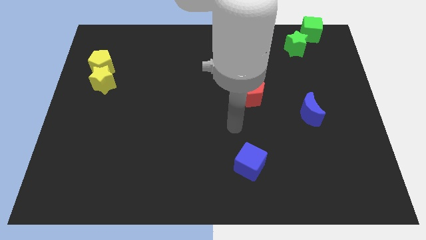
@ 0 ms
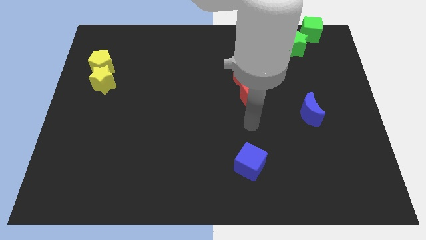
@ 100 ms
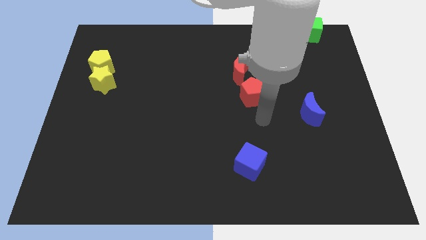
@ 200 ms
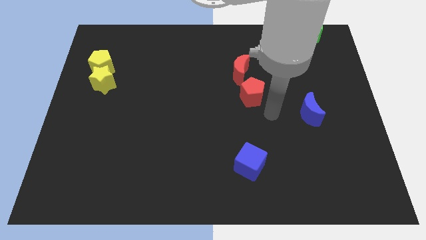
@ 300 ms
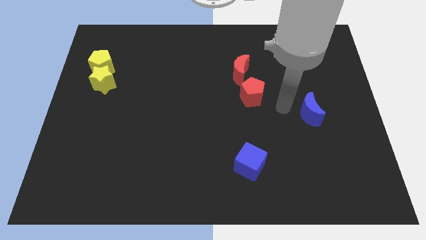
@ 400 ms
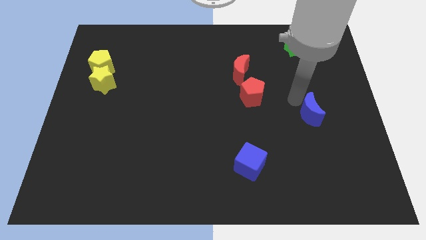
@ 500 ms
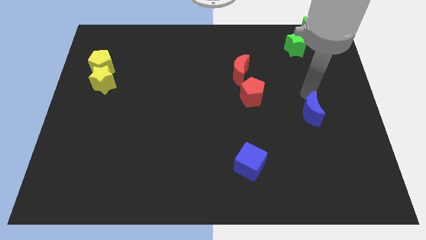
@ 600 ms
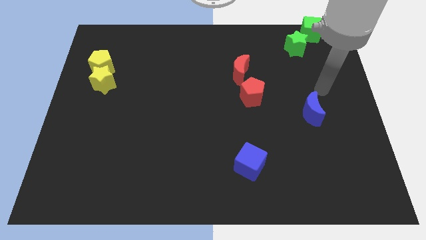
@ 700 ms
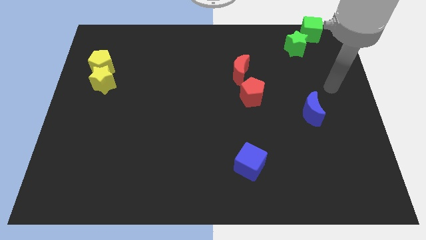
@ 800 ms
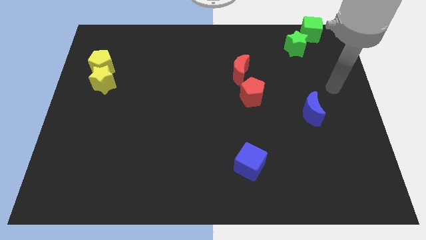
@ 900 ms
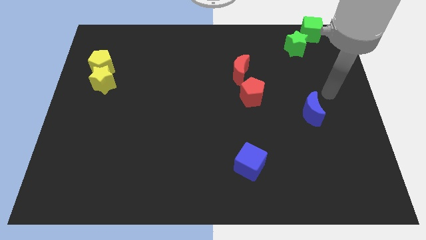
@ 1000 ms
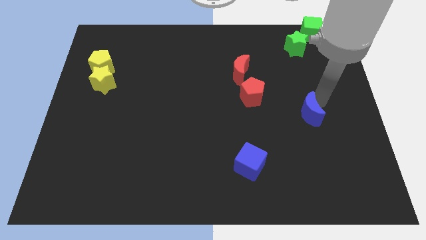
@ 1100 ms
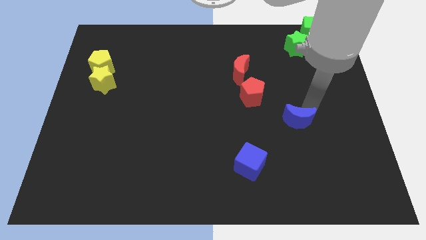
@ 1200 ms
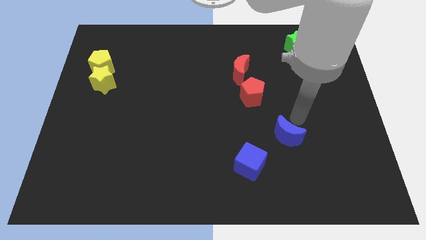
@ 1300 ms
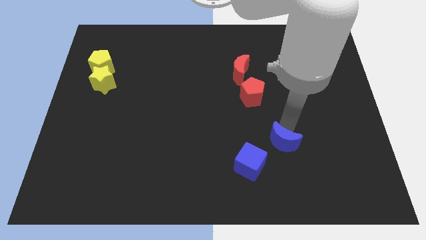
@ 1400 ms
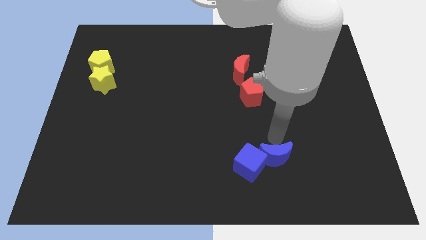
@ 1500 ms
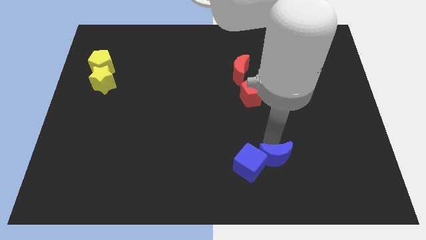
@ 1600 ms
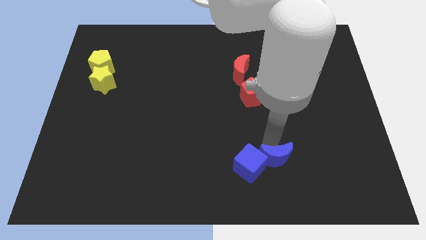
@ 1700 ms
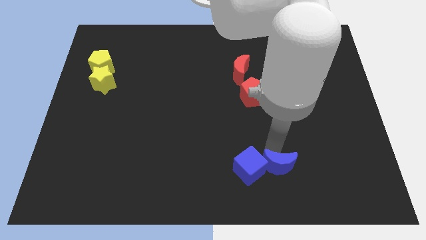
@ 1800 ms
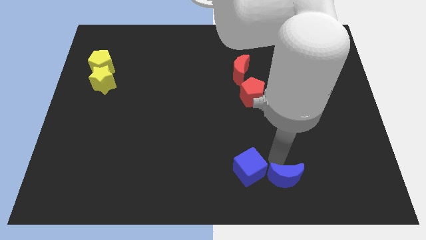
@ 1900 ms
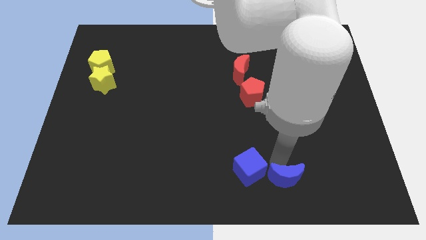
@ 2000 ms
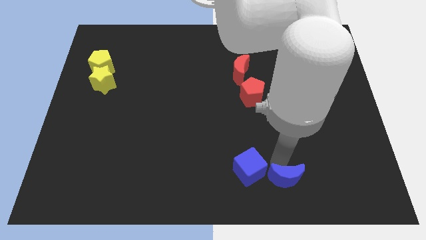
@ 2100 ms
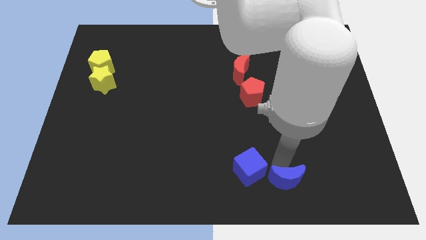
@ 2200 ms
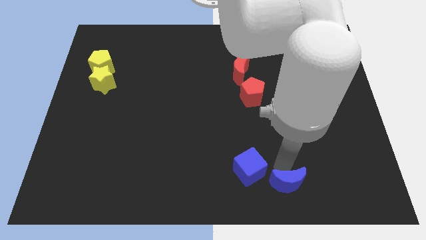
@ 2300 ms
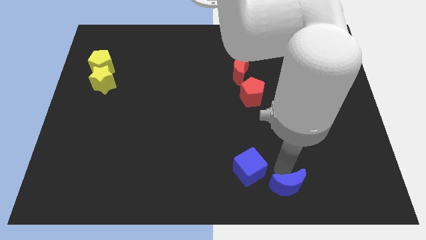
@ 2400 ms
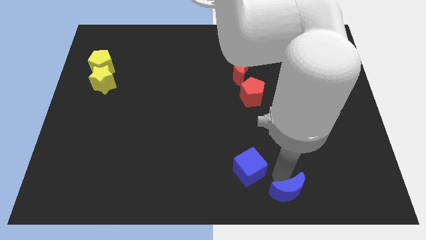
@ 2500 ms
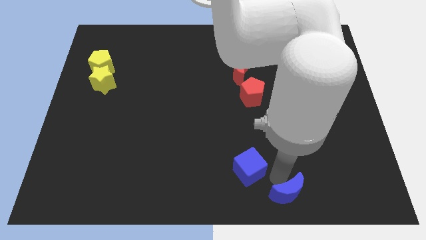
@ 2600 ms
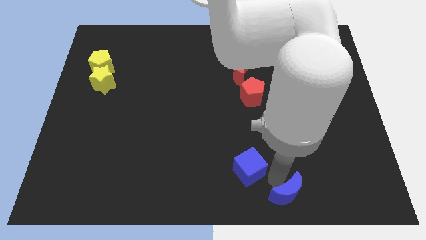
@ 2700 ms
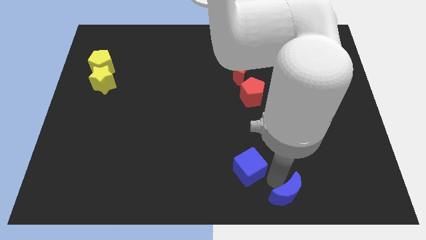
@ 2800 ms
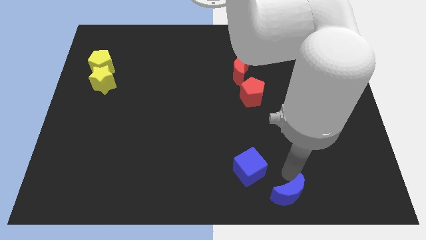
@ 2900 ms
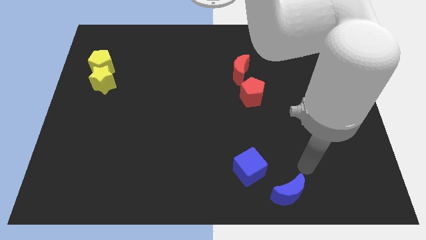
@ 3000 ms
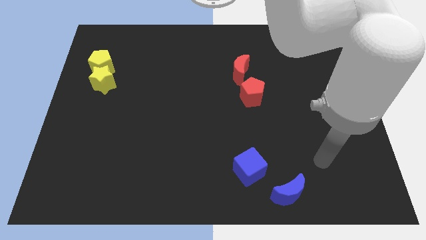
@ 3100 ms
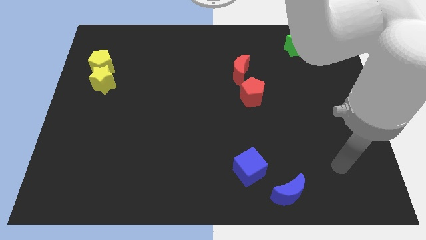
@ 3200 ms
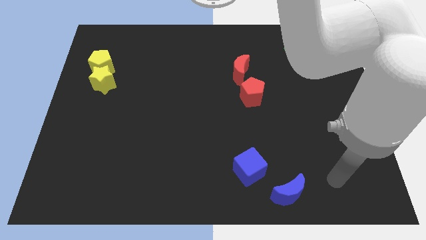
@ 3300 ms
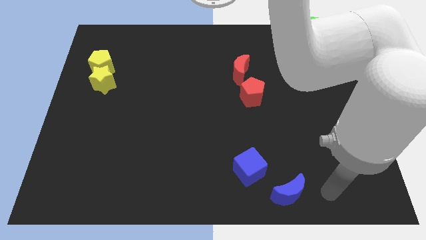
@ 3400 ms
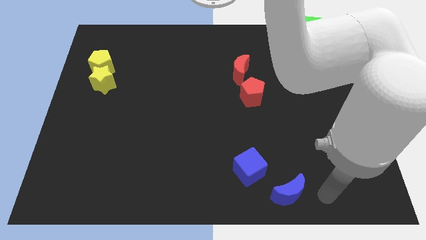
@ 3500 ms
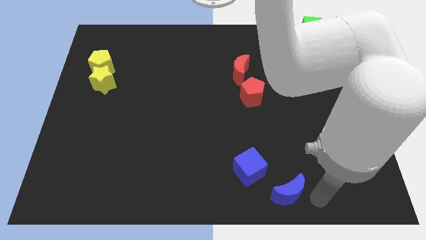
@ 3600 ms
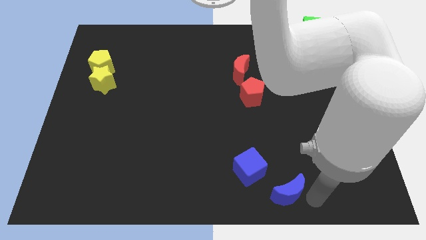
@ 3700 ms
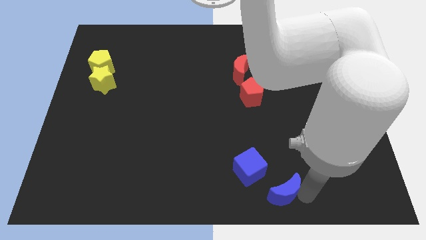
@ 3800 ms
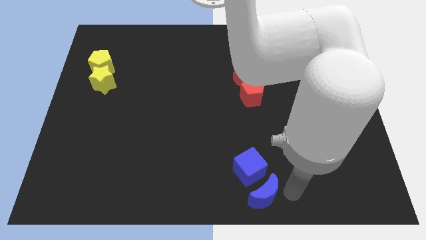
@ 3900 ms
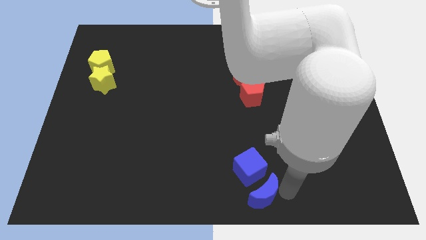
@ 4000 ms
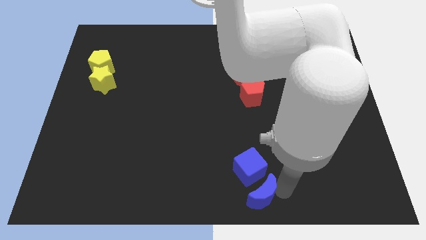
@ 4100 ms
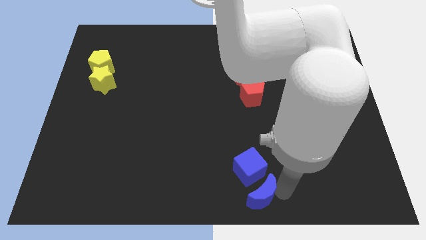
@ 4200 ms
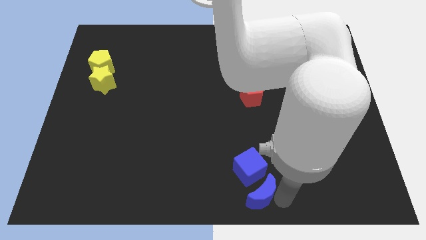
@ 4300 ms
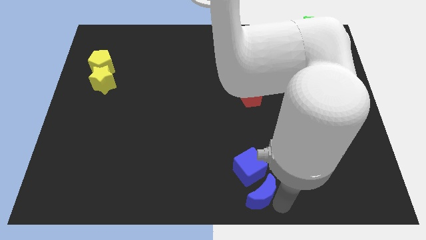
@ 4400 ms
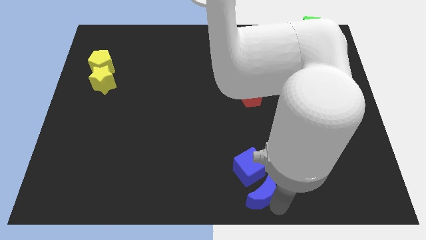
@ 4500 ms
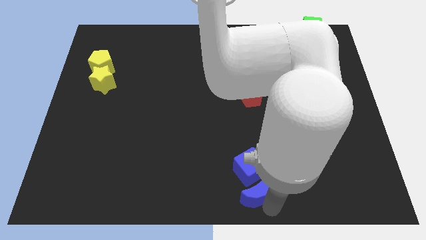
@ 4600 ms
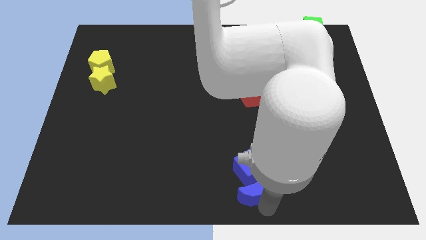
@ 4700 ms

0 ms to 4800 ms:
push the blue moon down to the blue cube

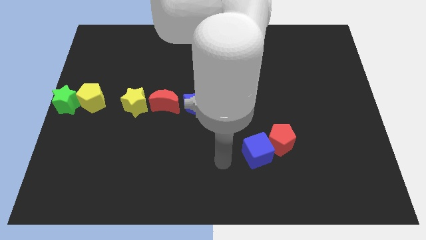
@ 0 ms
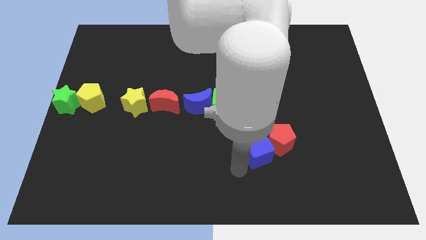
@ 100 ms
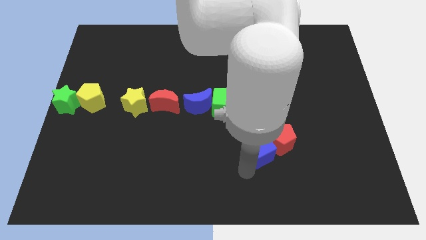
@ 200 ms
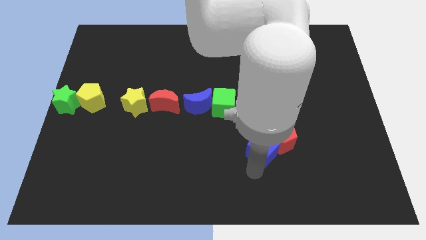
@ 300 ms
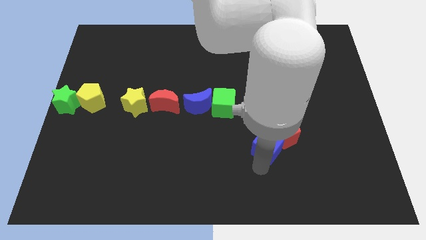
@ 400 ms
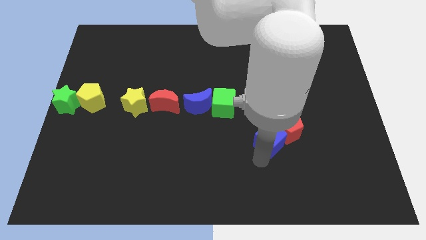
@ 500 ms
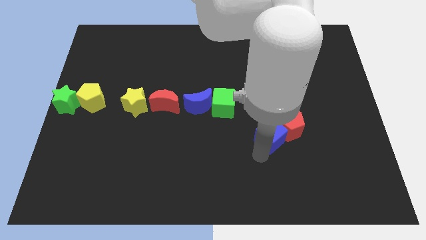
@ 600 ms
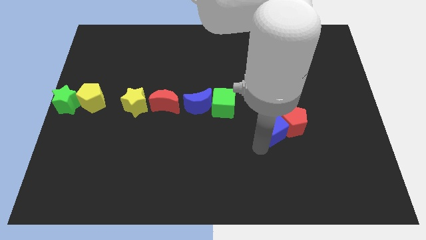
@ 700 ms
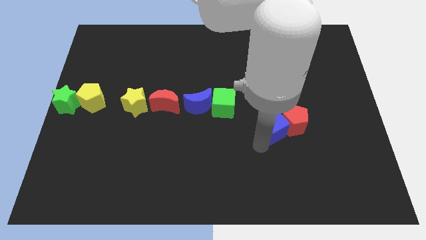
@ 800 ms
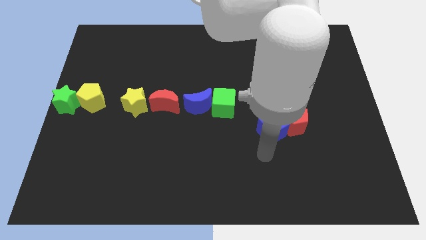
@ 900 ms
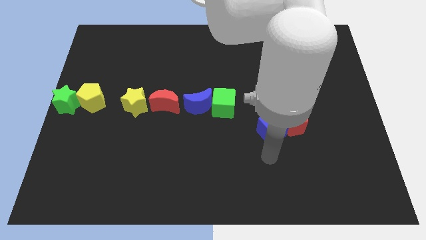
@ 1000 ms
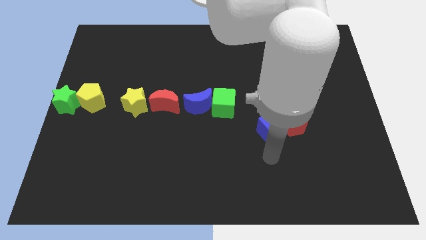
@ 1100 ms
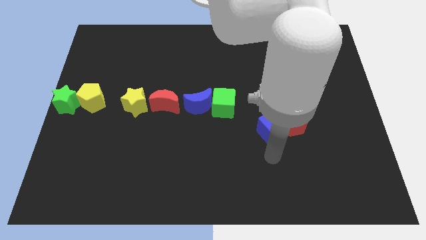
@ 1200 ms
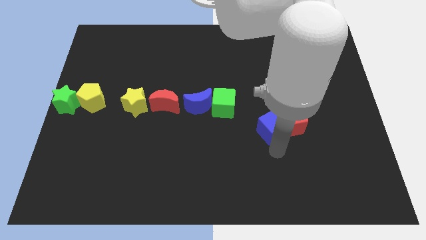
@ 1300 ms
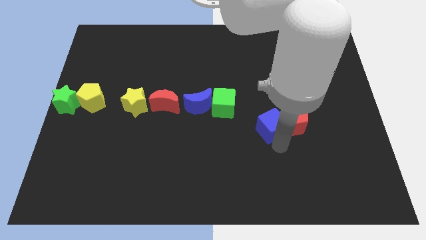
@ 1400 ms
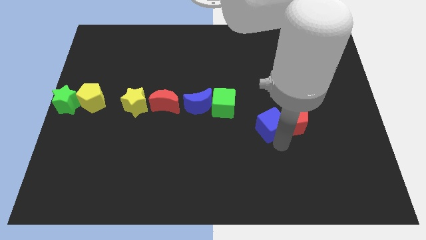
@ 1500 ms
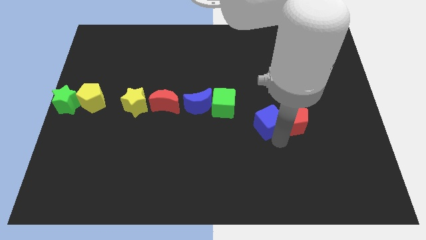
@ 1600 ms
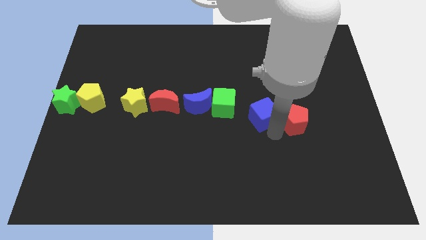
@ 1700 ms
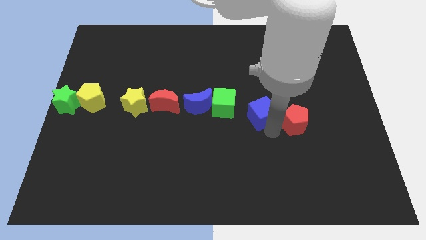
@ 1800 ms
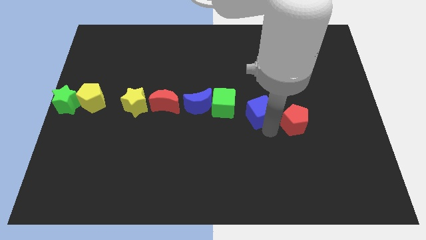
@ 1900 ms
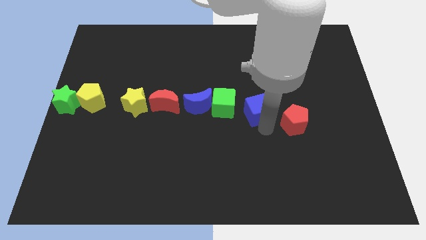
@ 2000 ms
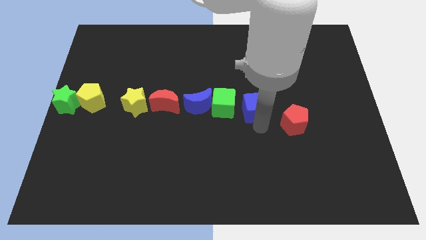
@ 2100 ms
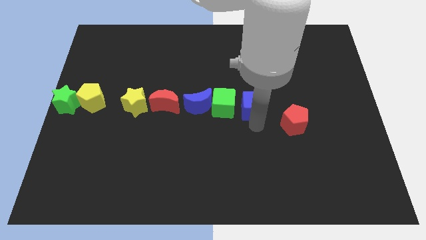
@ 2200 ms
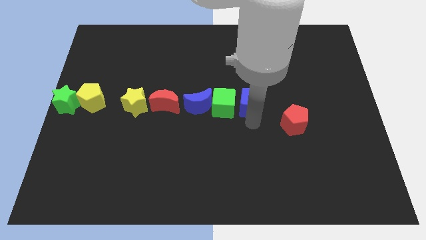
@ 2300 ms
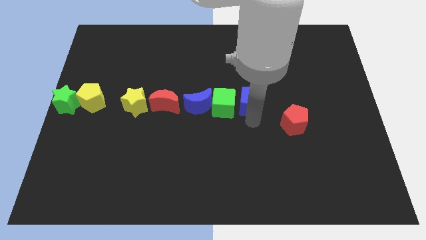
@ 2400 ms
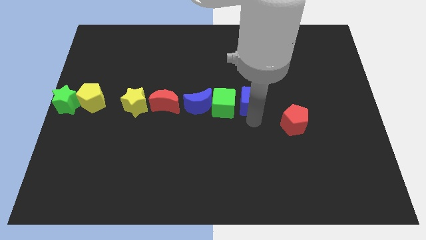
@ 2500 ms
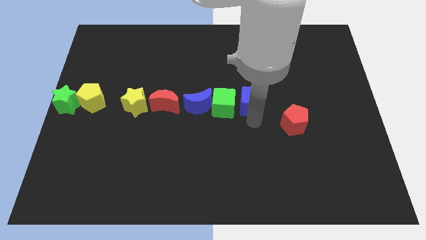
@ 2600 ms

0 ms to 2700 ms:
separate the blue cube from red pentagon to the right of green cube

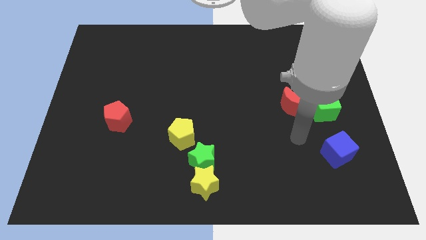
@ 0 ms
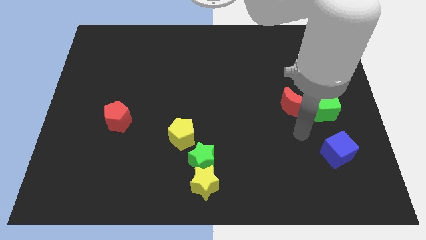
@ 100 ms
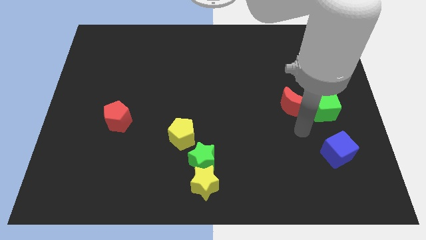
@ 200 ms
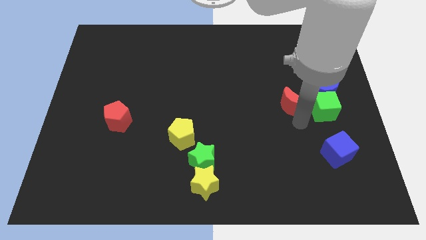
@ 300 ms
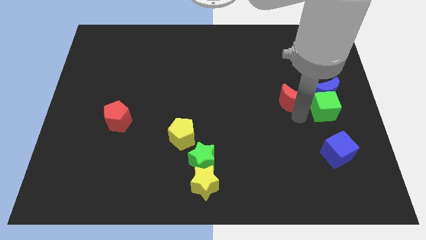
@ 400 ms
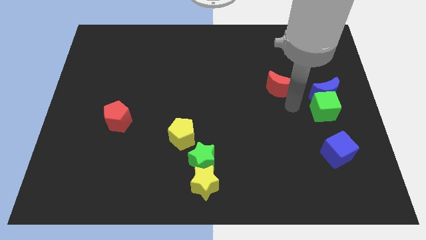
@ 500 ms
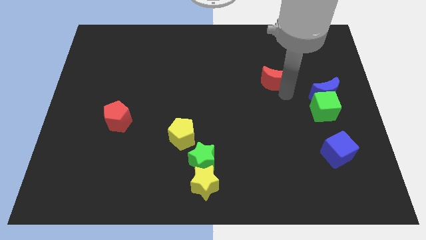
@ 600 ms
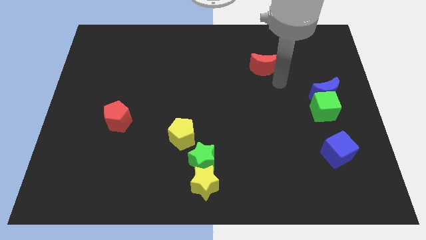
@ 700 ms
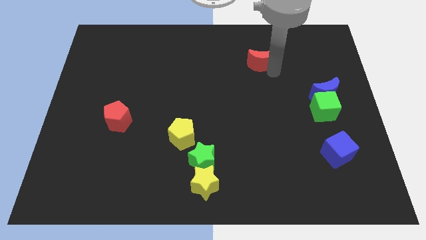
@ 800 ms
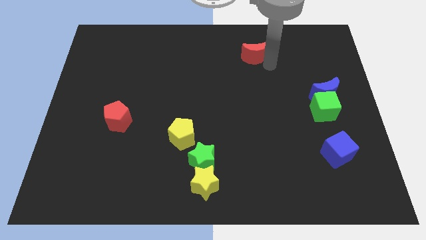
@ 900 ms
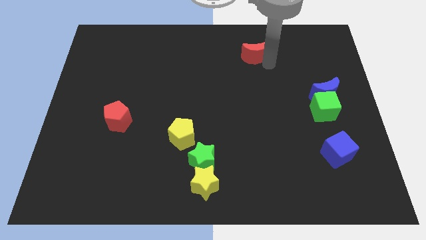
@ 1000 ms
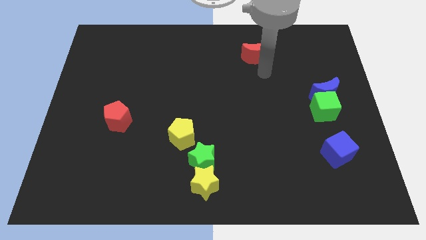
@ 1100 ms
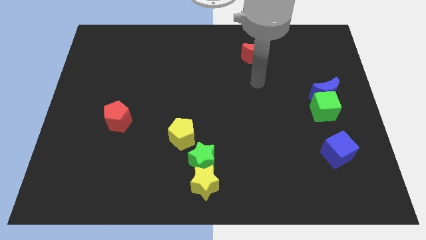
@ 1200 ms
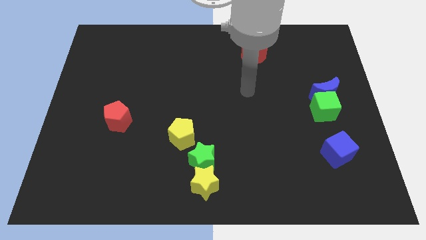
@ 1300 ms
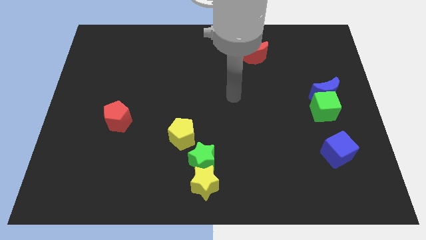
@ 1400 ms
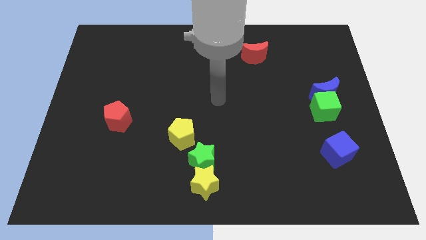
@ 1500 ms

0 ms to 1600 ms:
drag the red crescent towards the top side of the board
